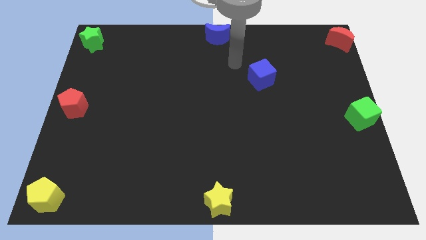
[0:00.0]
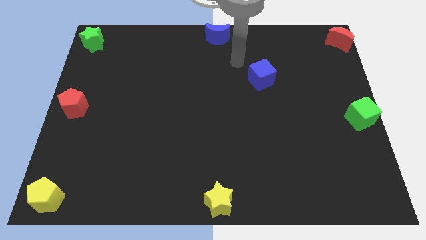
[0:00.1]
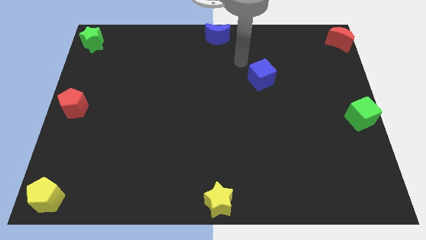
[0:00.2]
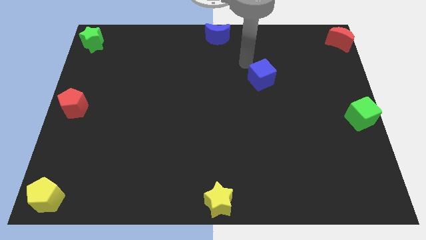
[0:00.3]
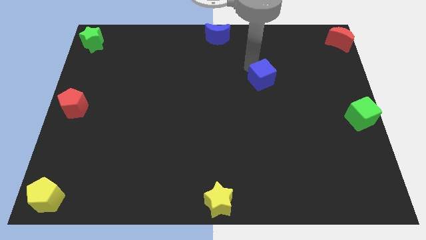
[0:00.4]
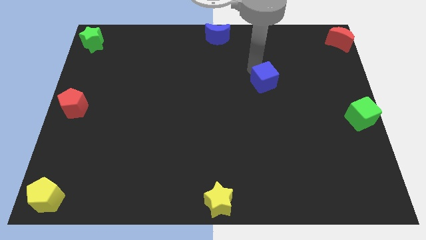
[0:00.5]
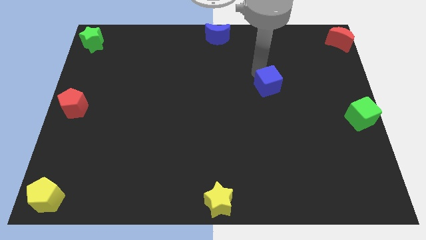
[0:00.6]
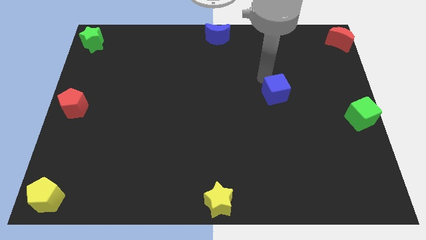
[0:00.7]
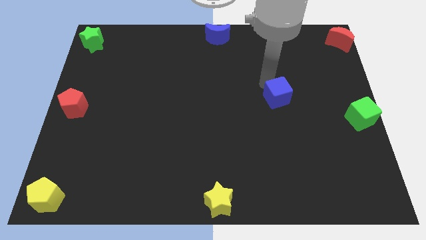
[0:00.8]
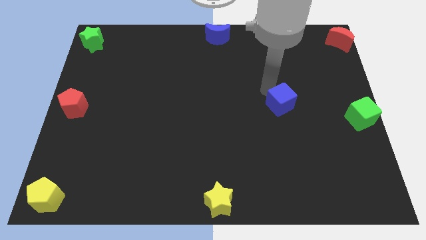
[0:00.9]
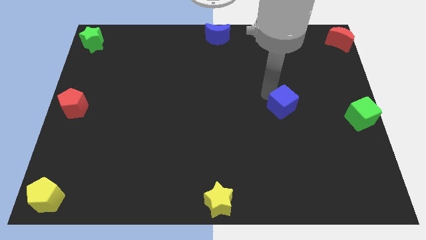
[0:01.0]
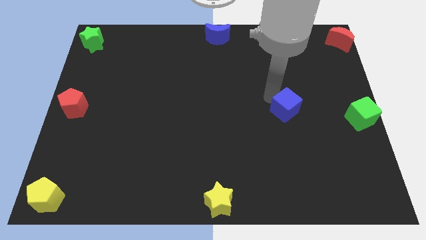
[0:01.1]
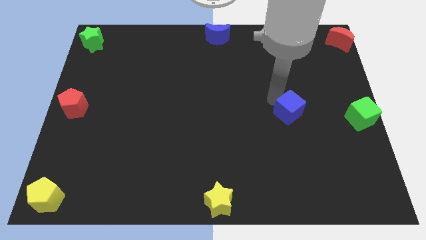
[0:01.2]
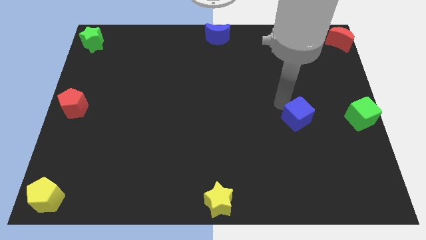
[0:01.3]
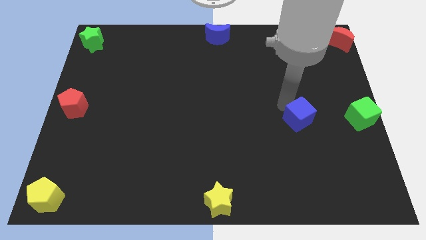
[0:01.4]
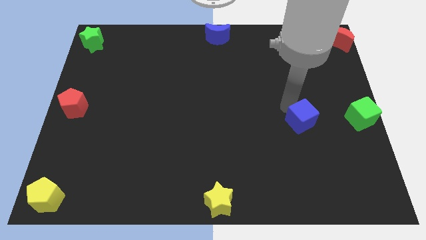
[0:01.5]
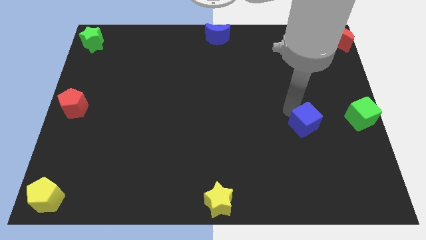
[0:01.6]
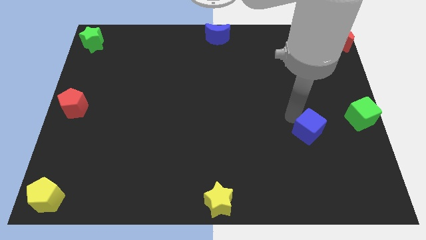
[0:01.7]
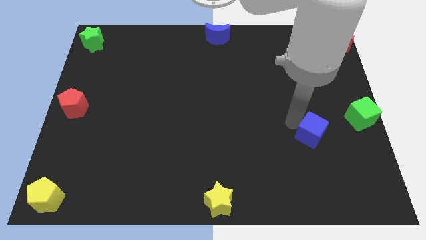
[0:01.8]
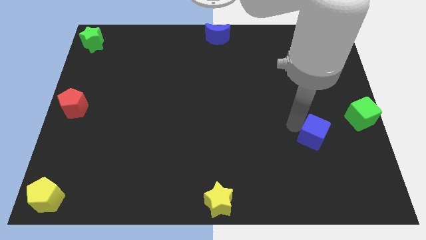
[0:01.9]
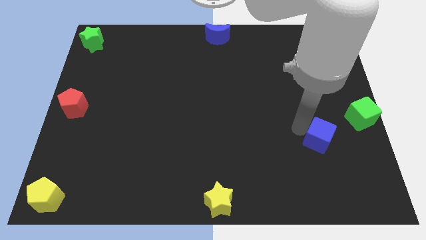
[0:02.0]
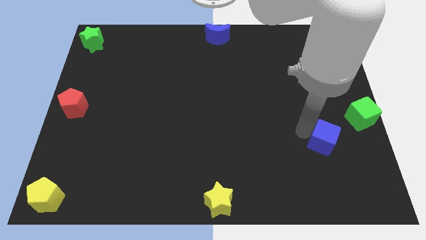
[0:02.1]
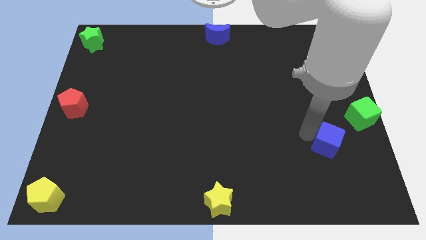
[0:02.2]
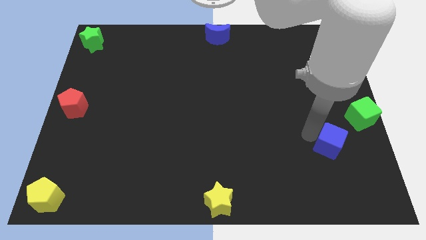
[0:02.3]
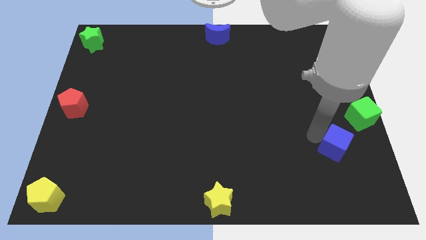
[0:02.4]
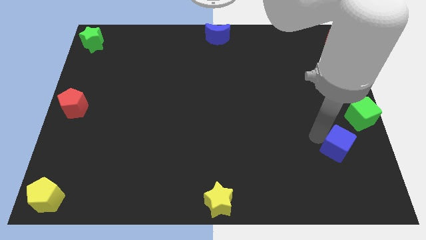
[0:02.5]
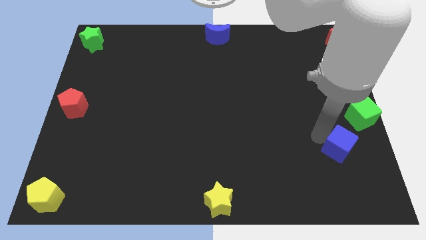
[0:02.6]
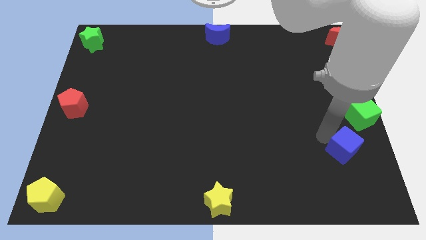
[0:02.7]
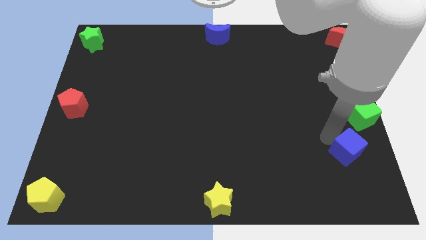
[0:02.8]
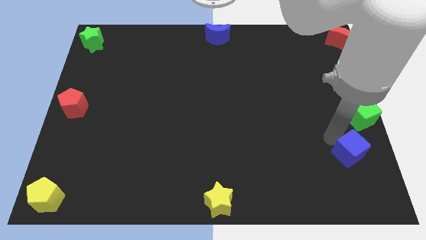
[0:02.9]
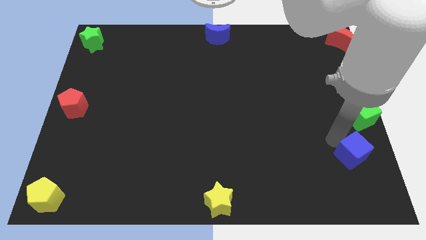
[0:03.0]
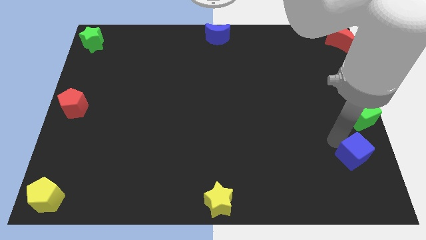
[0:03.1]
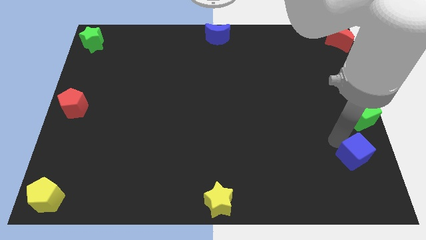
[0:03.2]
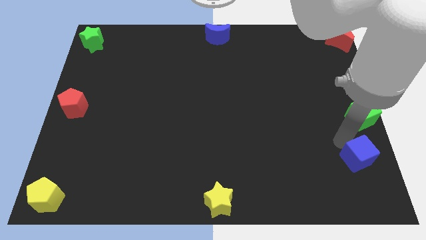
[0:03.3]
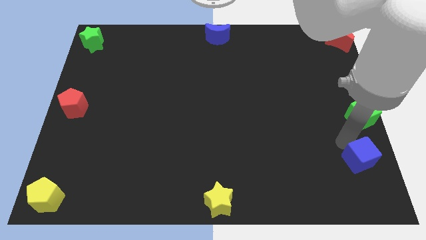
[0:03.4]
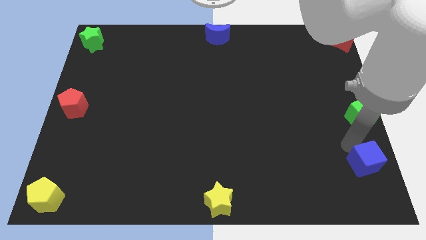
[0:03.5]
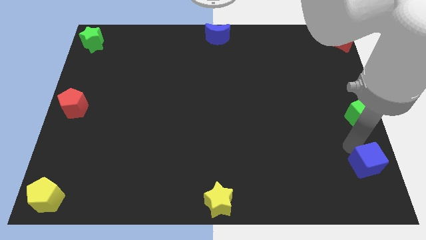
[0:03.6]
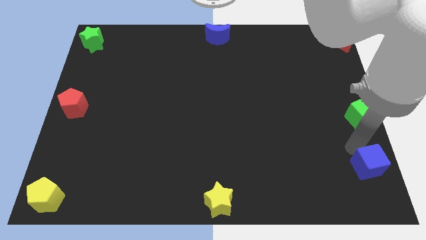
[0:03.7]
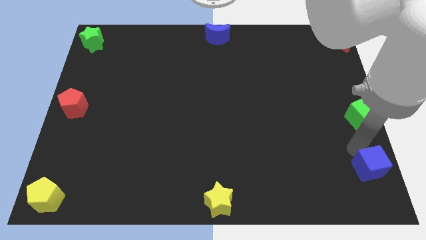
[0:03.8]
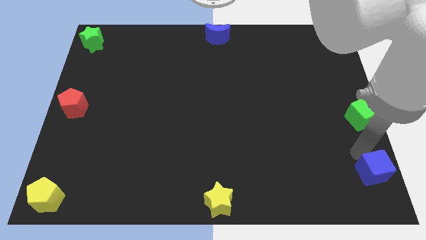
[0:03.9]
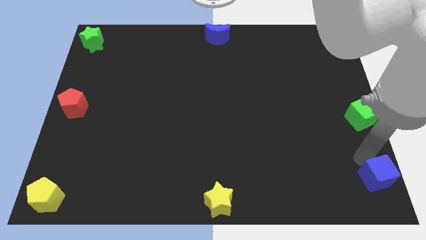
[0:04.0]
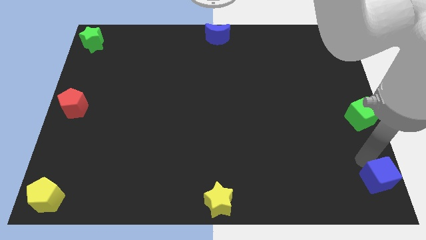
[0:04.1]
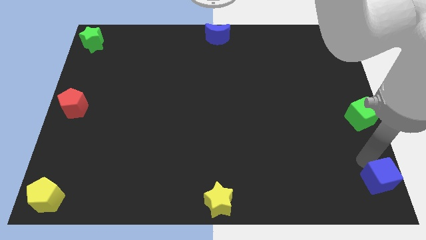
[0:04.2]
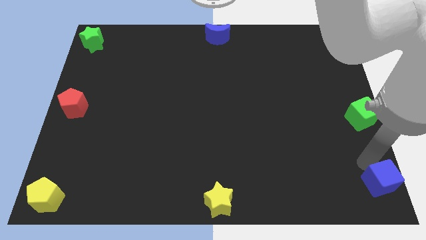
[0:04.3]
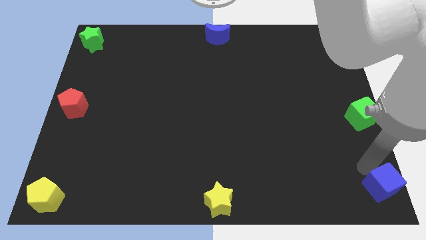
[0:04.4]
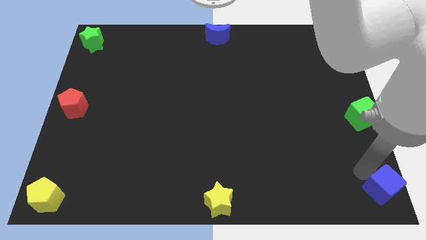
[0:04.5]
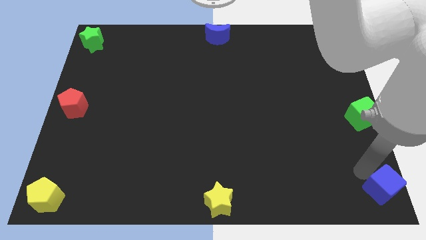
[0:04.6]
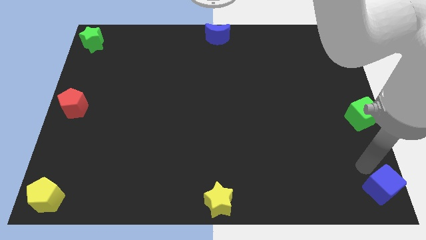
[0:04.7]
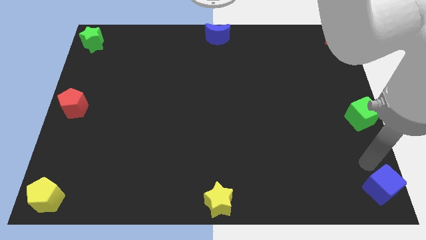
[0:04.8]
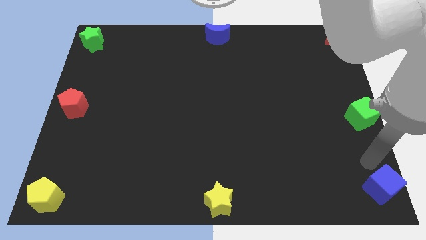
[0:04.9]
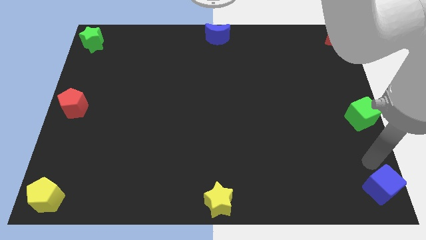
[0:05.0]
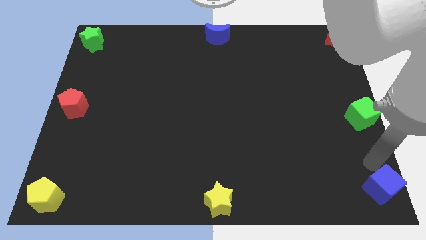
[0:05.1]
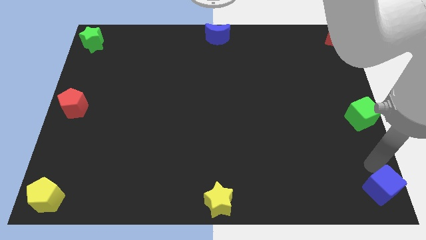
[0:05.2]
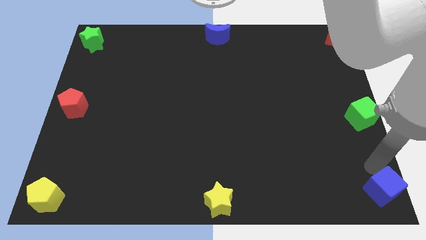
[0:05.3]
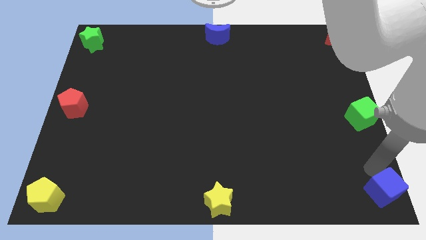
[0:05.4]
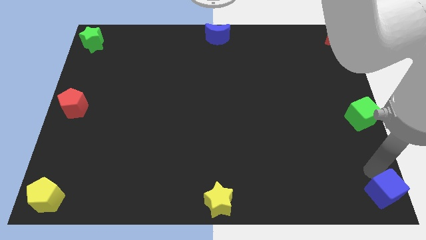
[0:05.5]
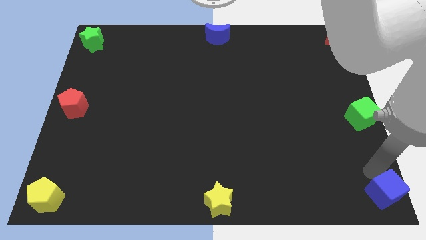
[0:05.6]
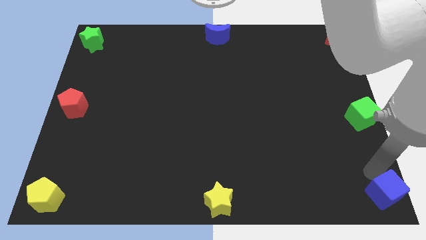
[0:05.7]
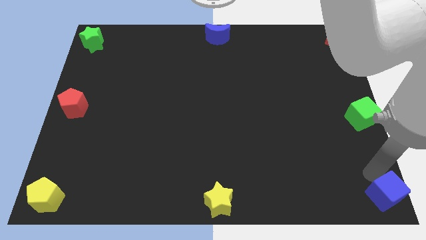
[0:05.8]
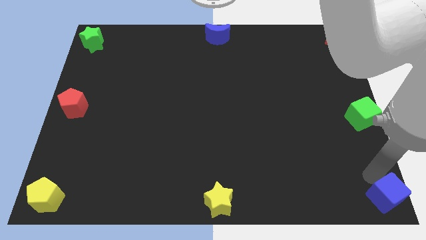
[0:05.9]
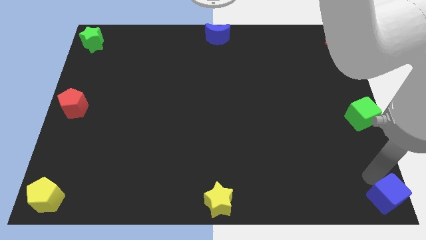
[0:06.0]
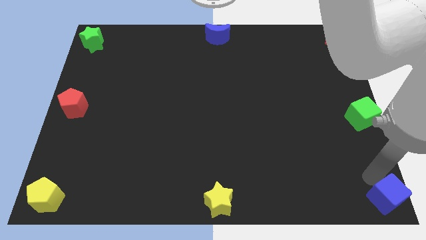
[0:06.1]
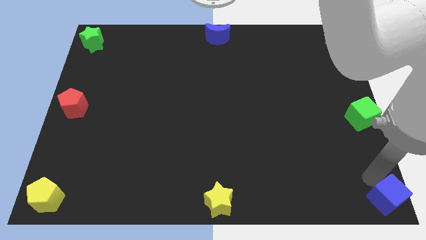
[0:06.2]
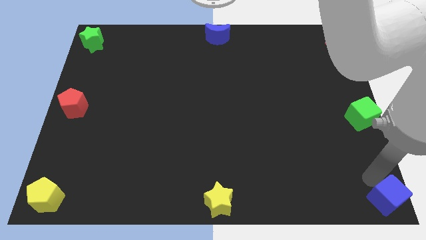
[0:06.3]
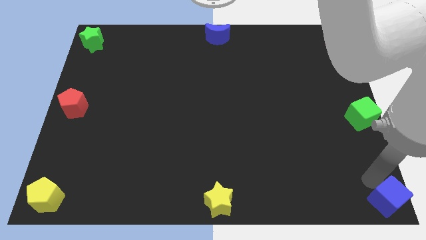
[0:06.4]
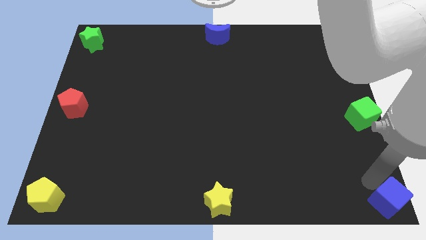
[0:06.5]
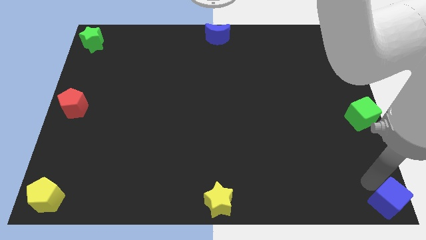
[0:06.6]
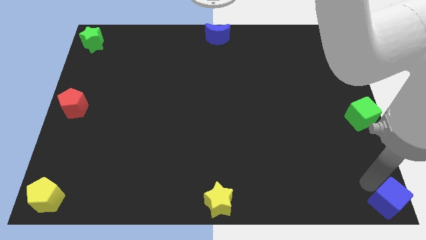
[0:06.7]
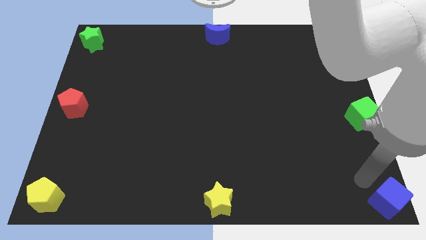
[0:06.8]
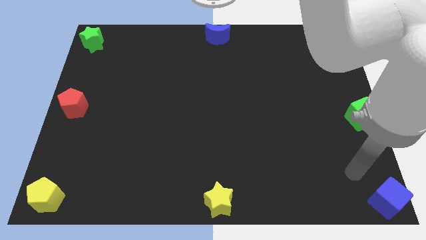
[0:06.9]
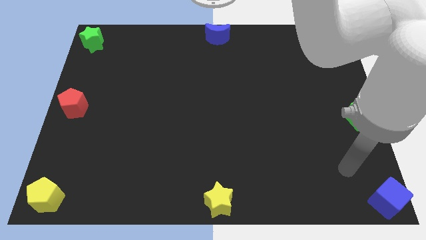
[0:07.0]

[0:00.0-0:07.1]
move the blue cube to the bottom right corner of the board

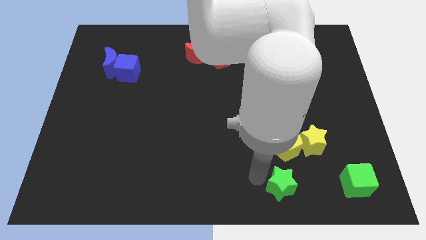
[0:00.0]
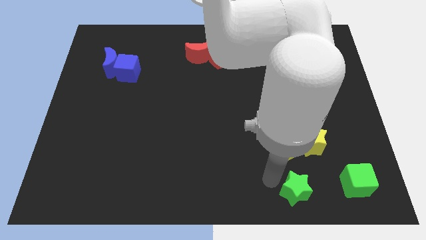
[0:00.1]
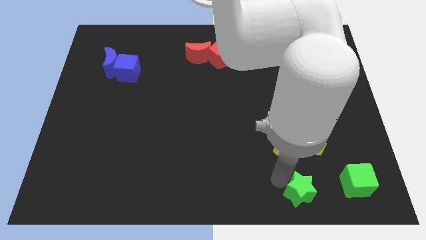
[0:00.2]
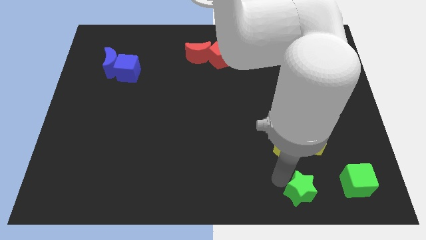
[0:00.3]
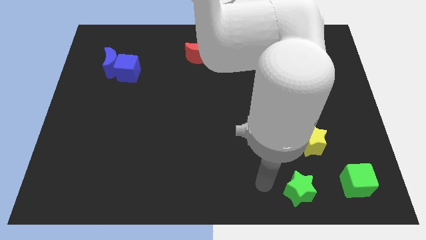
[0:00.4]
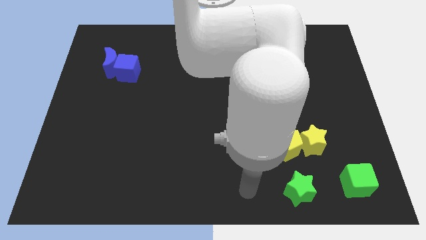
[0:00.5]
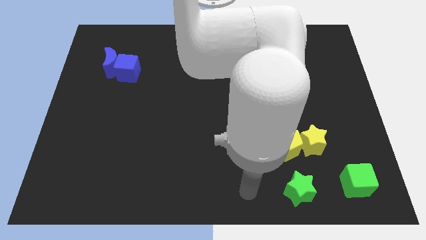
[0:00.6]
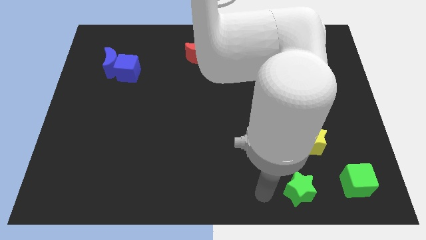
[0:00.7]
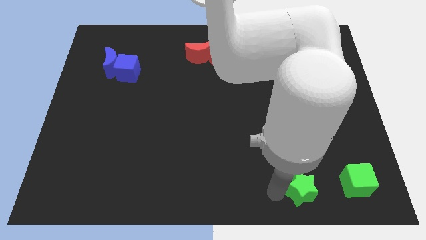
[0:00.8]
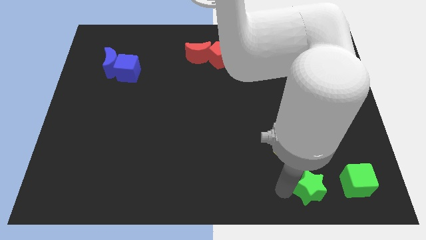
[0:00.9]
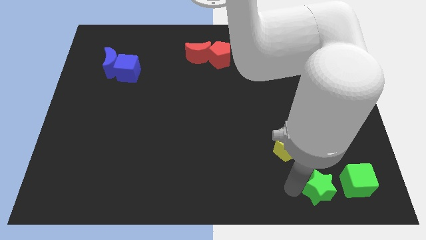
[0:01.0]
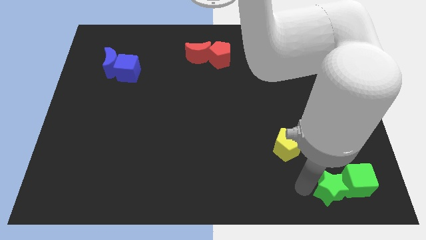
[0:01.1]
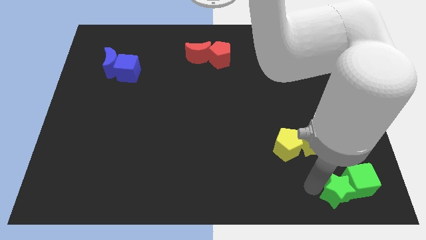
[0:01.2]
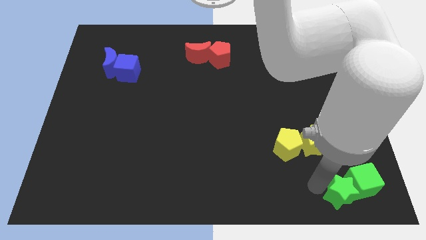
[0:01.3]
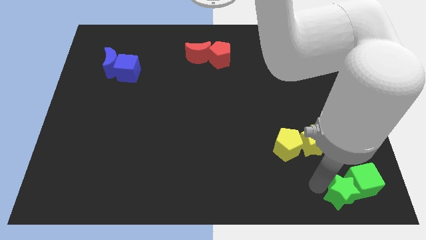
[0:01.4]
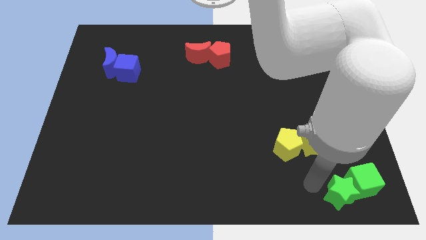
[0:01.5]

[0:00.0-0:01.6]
slide the green star into the green cube

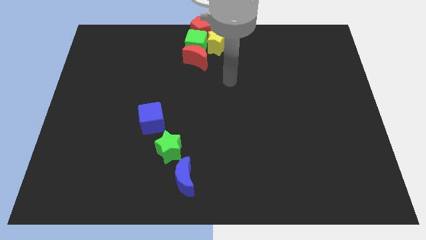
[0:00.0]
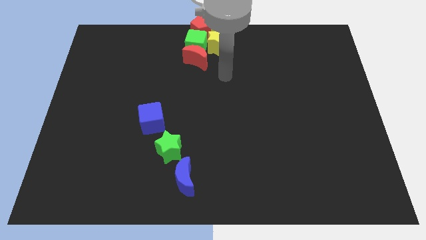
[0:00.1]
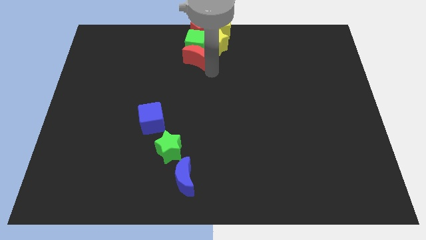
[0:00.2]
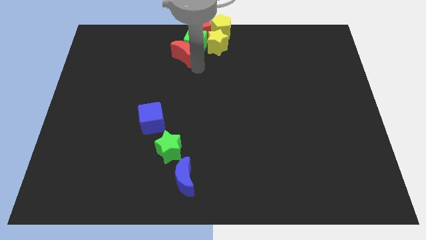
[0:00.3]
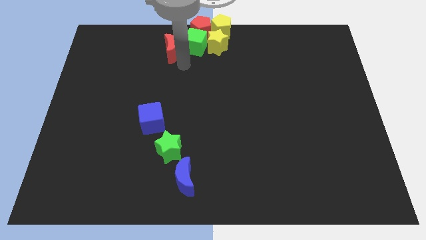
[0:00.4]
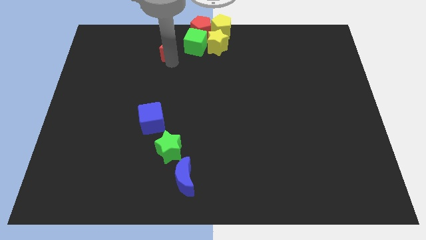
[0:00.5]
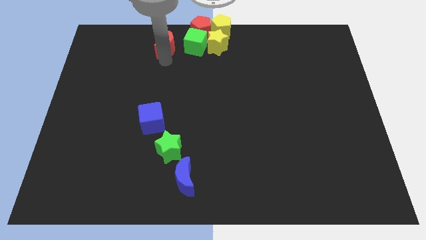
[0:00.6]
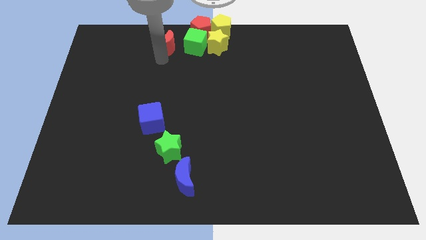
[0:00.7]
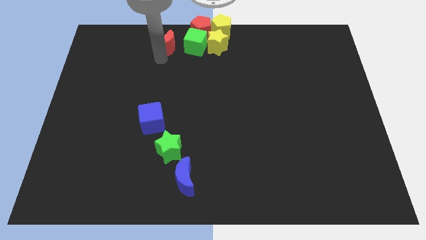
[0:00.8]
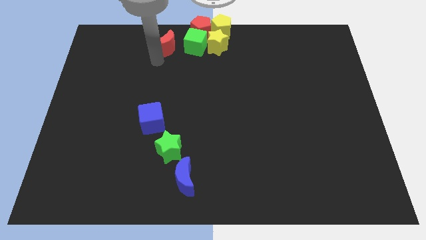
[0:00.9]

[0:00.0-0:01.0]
place the red crescent to the left of the green cube
